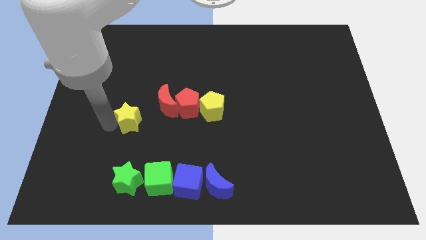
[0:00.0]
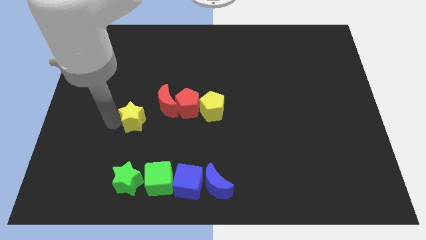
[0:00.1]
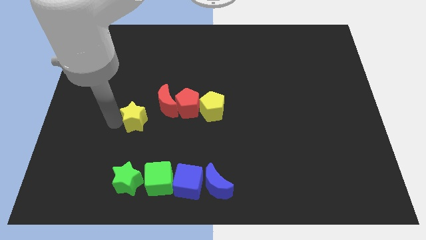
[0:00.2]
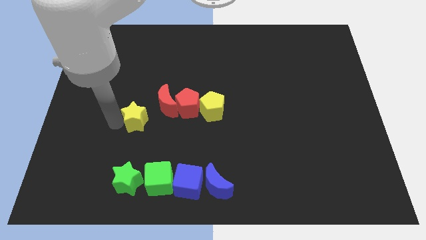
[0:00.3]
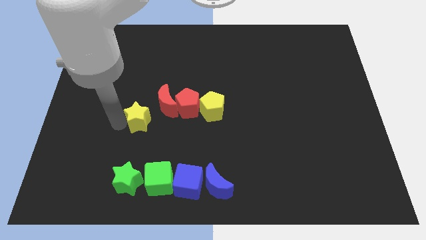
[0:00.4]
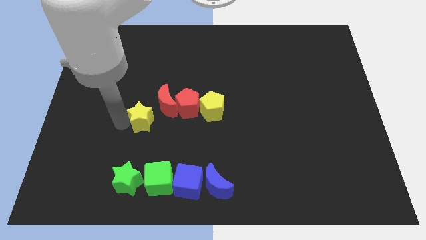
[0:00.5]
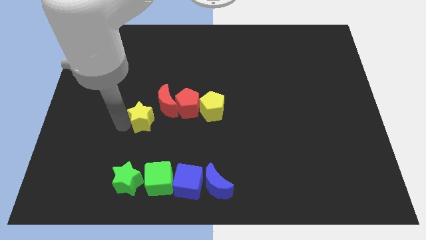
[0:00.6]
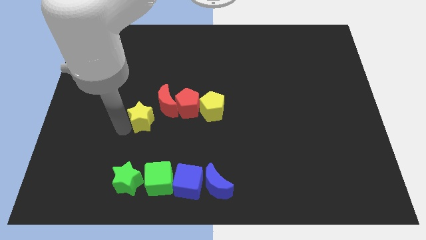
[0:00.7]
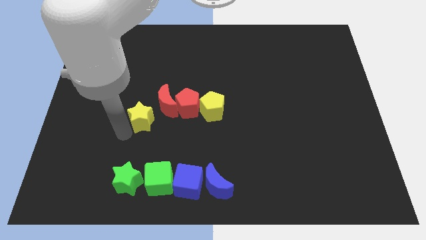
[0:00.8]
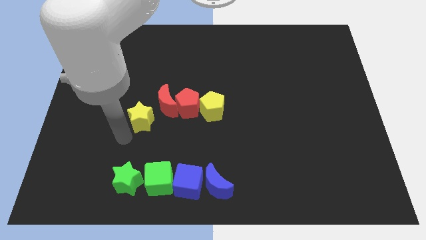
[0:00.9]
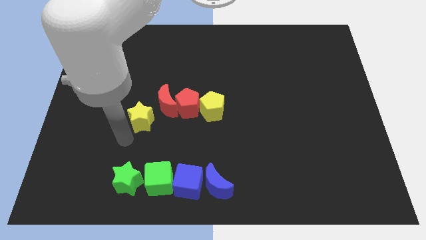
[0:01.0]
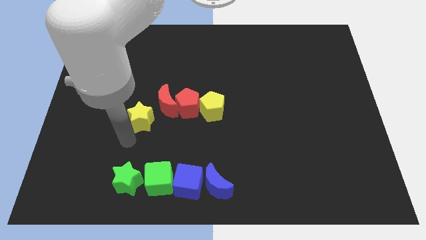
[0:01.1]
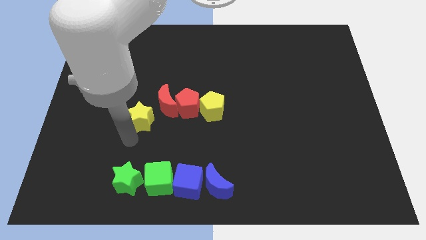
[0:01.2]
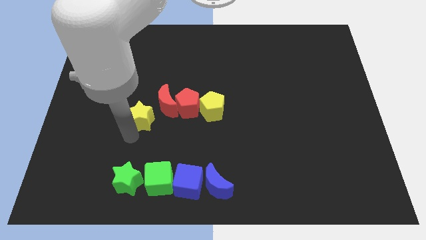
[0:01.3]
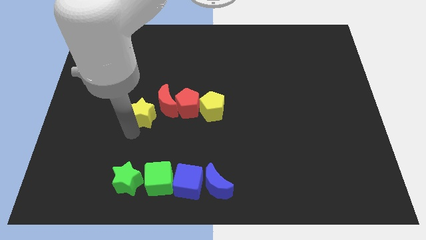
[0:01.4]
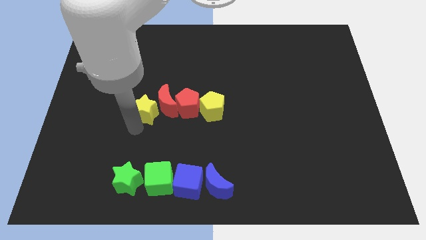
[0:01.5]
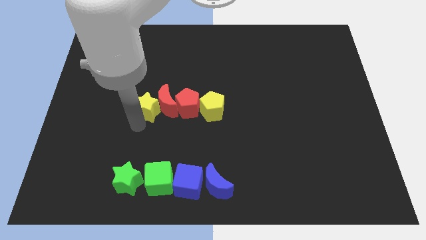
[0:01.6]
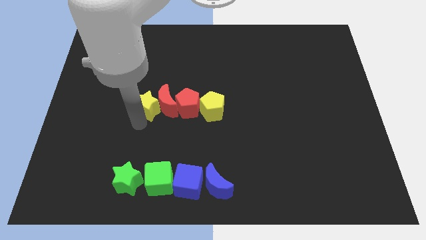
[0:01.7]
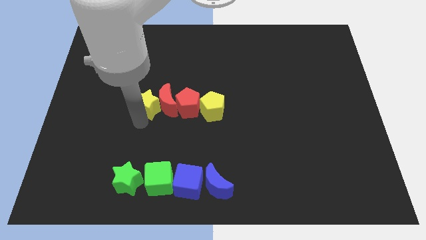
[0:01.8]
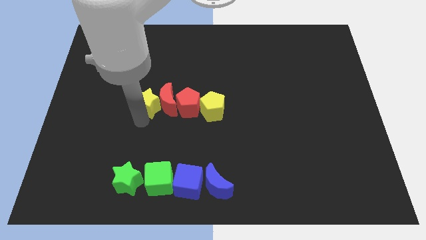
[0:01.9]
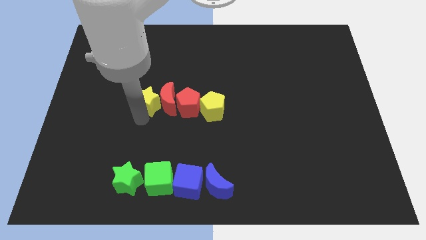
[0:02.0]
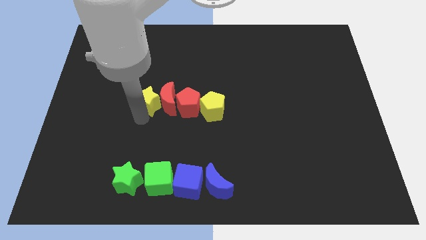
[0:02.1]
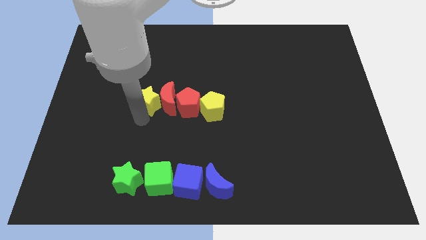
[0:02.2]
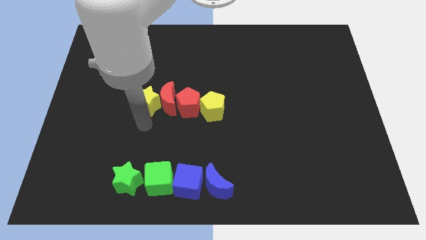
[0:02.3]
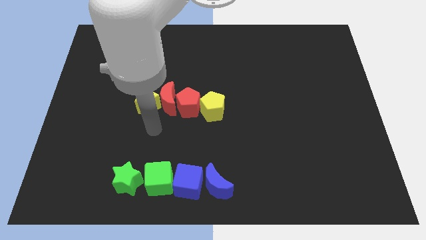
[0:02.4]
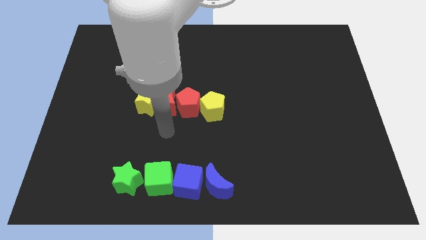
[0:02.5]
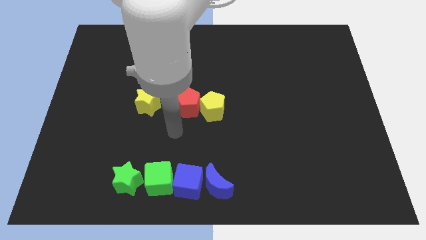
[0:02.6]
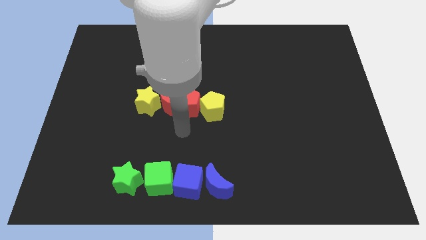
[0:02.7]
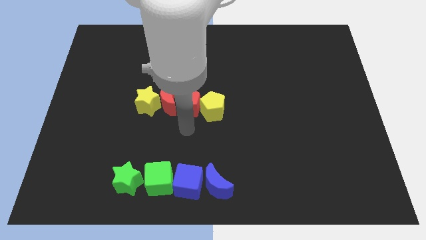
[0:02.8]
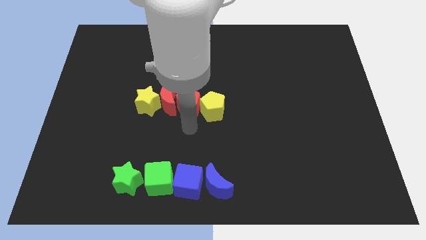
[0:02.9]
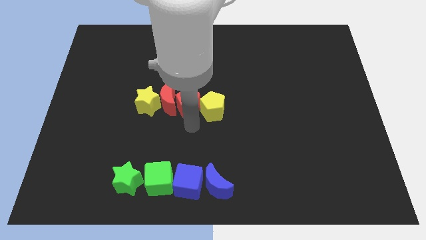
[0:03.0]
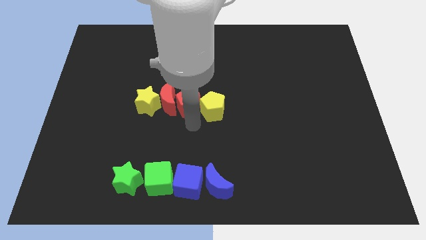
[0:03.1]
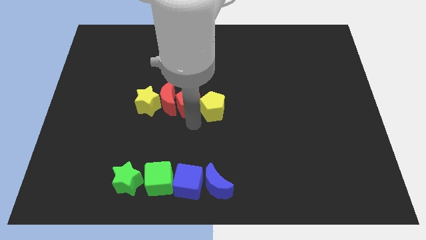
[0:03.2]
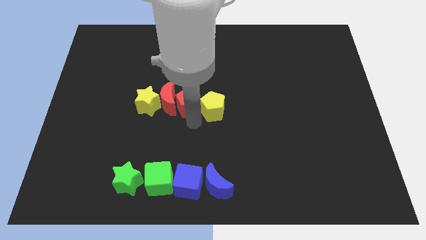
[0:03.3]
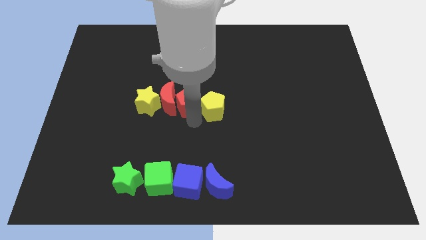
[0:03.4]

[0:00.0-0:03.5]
place the yellow star at the left side of the red moon

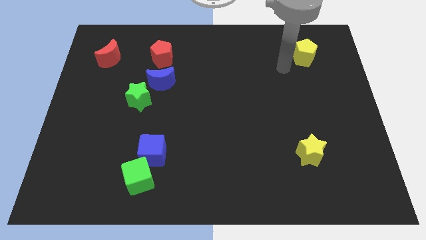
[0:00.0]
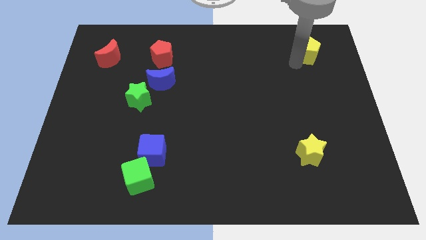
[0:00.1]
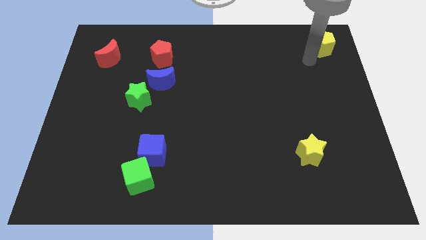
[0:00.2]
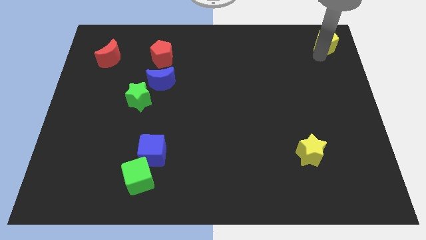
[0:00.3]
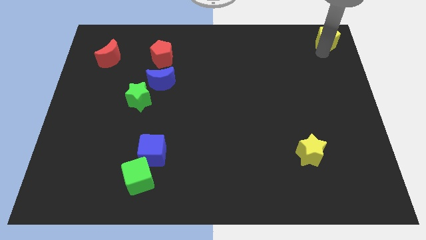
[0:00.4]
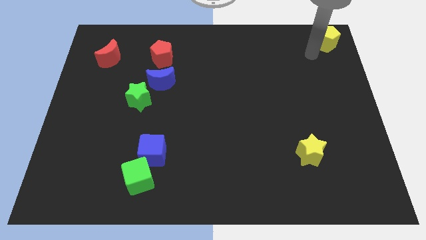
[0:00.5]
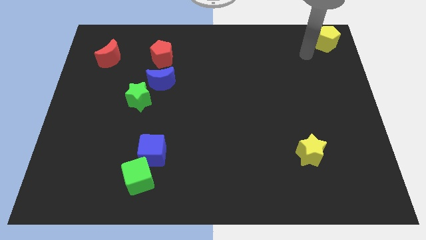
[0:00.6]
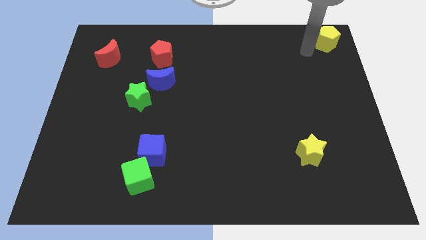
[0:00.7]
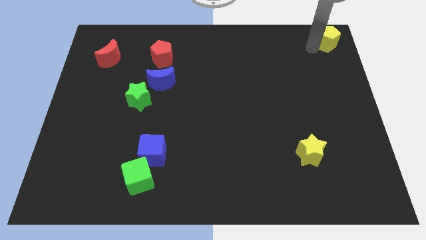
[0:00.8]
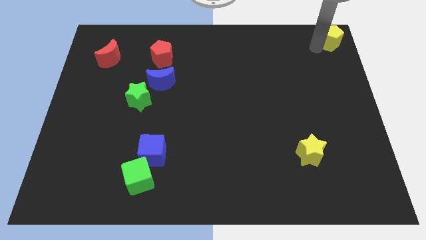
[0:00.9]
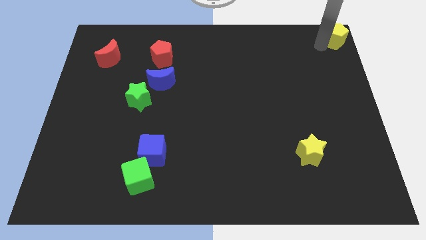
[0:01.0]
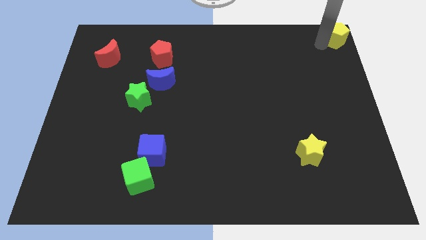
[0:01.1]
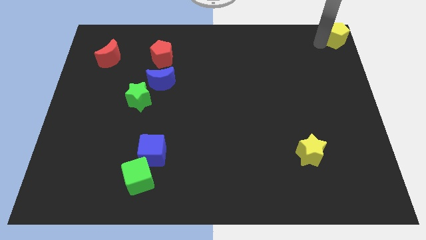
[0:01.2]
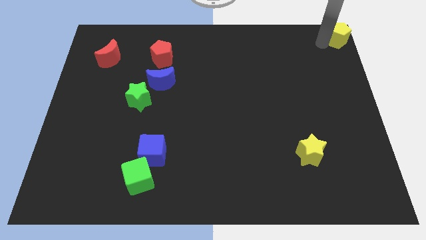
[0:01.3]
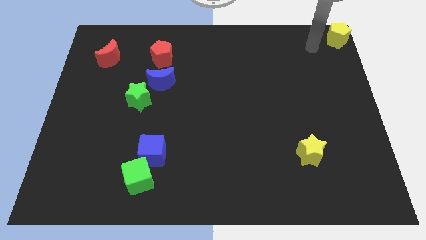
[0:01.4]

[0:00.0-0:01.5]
move the yellow pentagon to the top right corner of the board

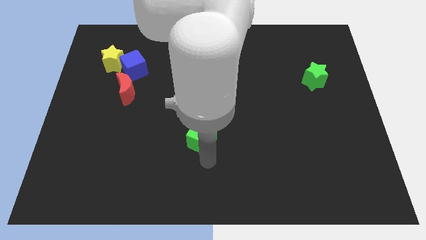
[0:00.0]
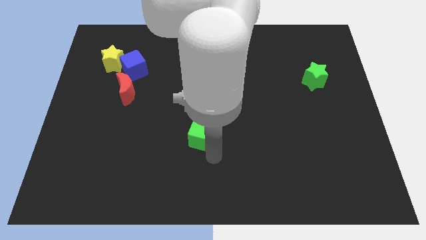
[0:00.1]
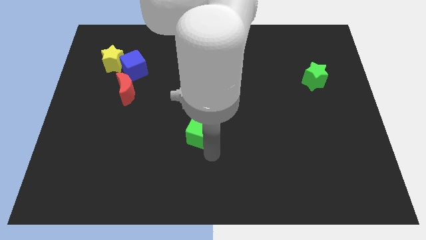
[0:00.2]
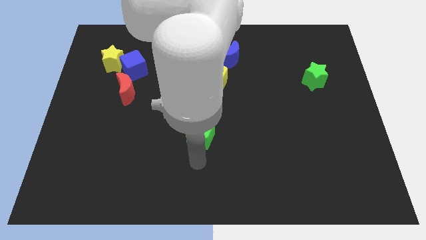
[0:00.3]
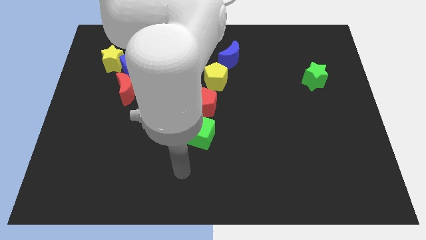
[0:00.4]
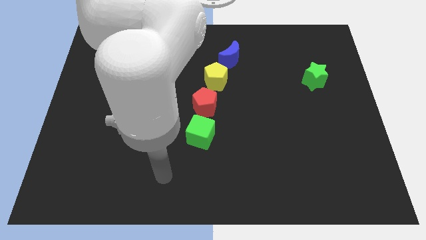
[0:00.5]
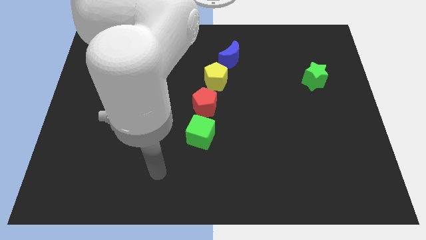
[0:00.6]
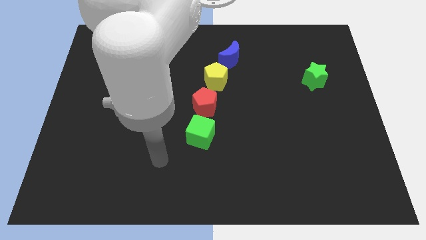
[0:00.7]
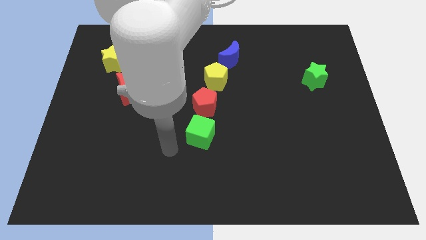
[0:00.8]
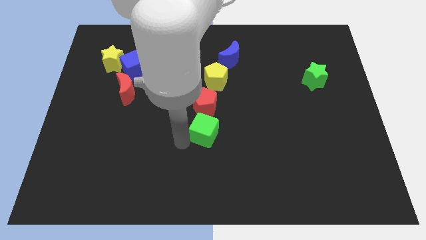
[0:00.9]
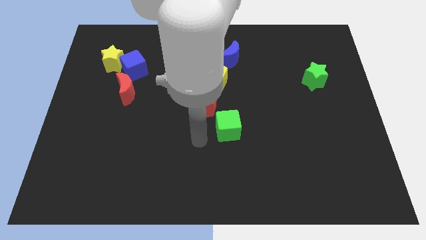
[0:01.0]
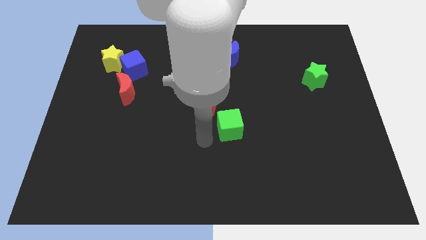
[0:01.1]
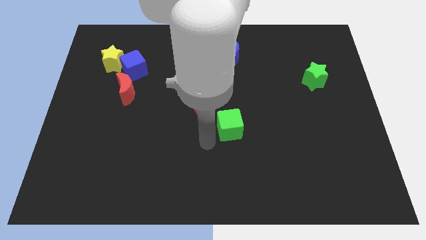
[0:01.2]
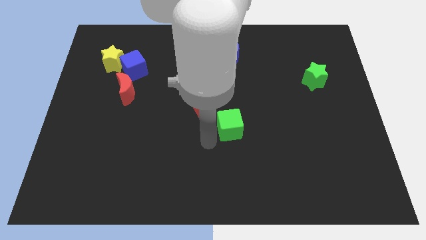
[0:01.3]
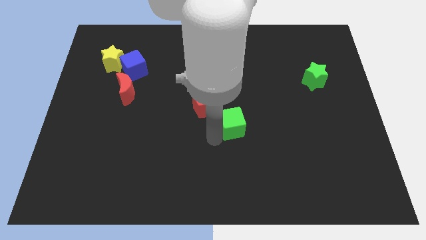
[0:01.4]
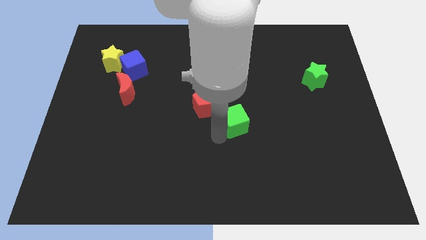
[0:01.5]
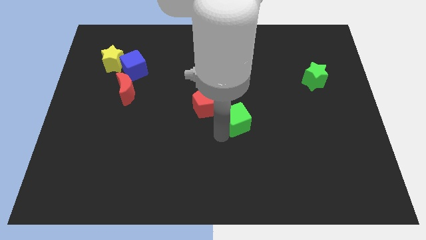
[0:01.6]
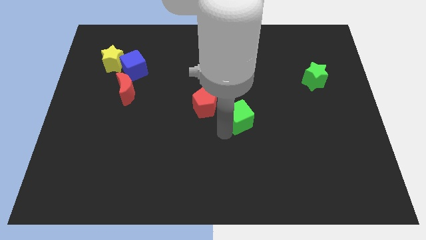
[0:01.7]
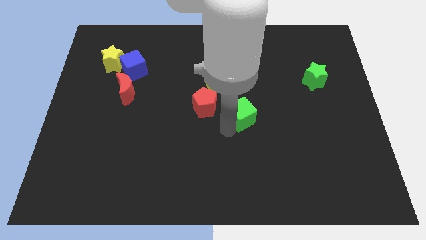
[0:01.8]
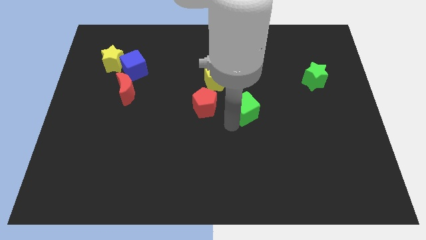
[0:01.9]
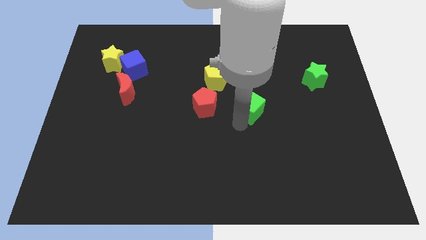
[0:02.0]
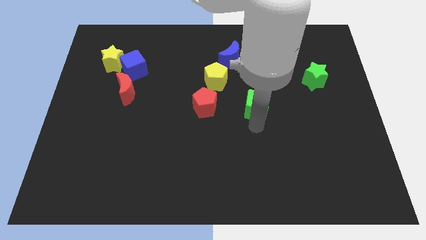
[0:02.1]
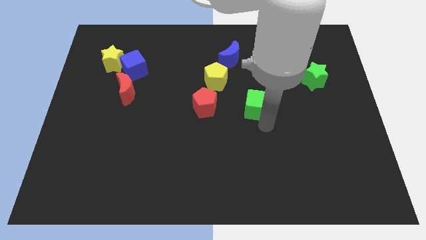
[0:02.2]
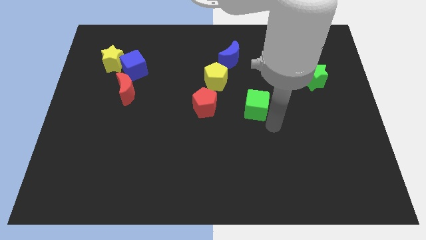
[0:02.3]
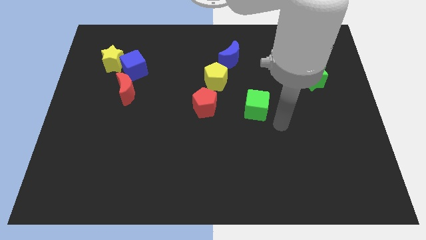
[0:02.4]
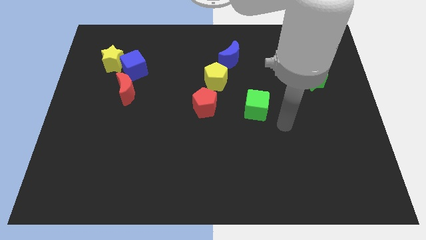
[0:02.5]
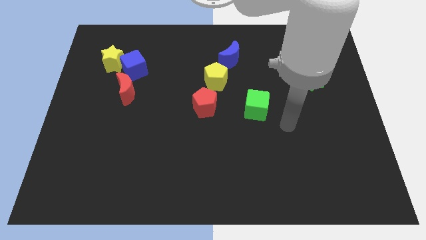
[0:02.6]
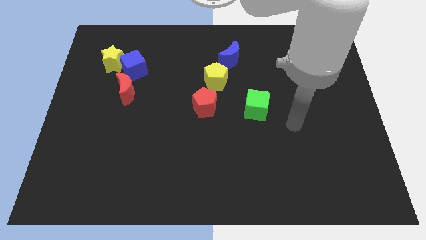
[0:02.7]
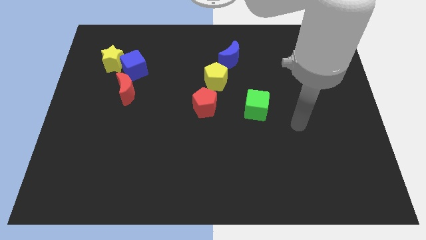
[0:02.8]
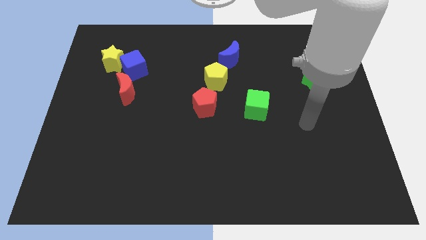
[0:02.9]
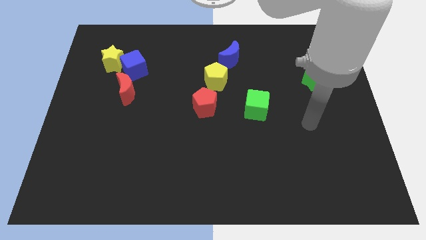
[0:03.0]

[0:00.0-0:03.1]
place the green cube horizontally at the right side of the red pentagon

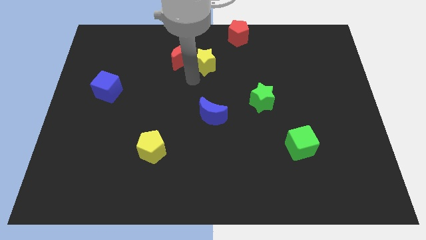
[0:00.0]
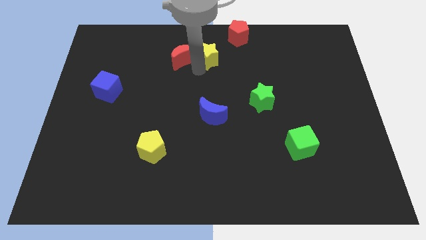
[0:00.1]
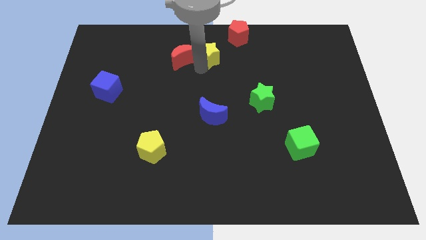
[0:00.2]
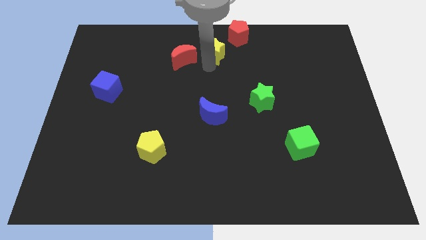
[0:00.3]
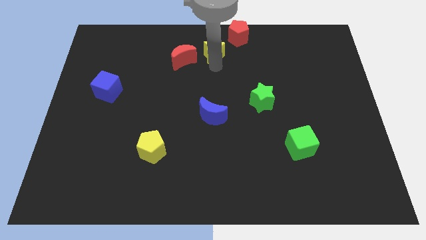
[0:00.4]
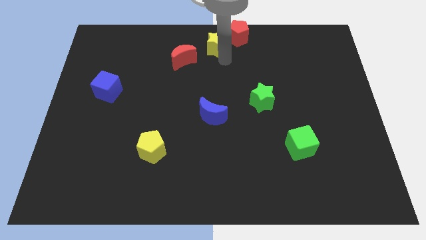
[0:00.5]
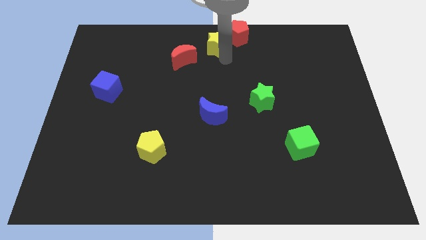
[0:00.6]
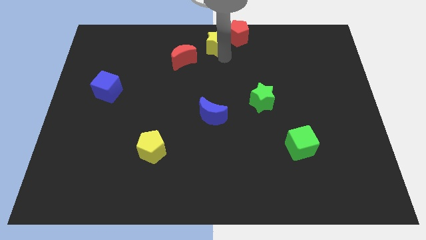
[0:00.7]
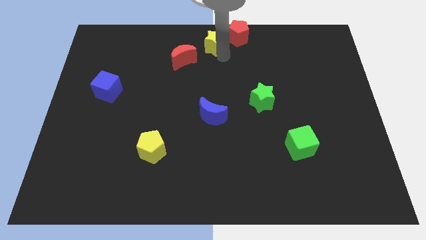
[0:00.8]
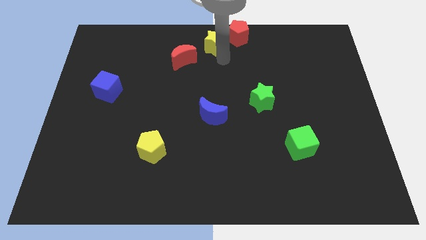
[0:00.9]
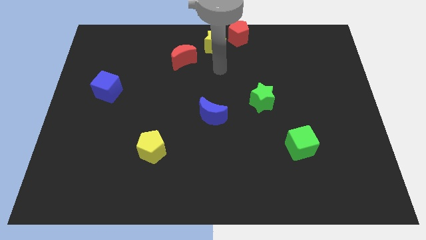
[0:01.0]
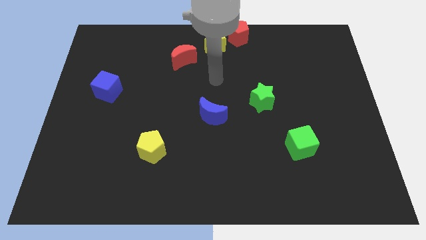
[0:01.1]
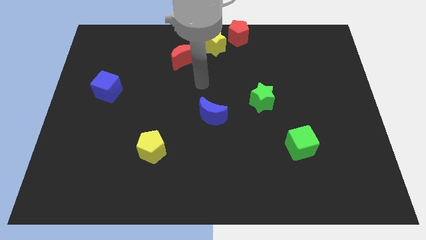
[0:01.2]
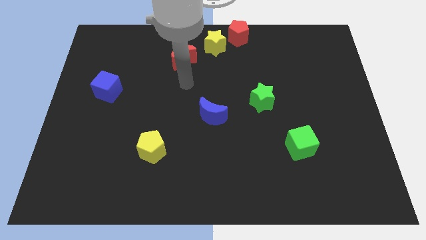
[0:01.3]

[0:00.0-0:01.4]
move the yellow star in between red pentagon and red crescent
